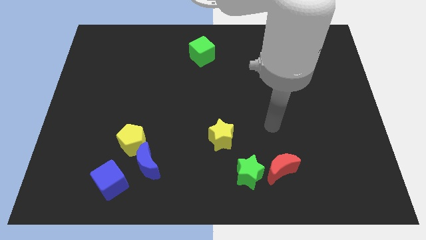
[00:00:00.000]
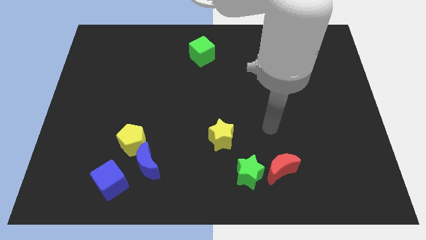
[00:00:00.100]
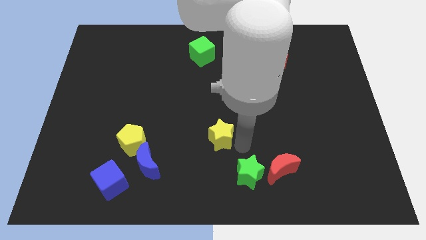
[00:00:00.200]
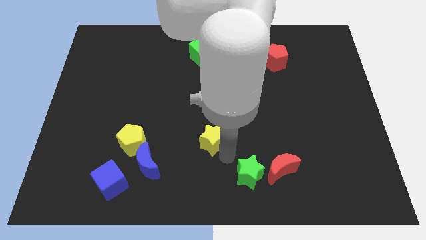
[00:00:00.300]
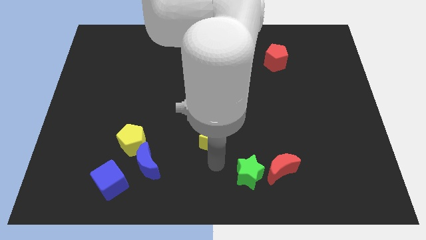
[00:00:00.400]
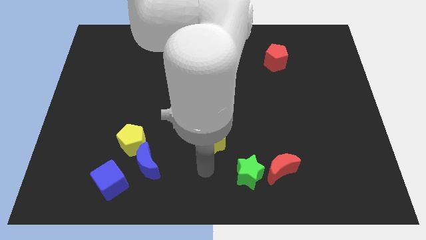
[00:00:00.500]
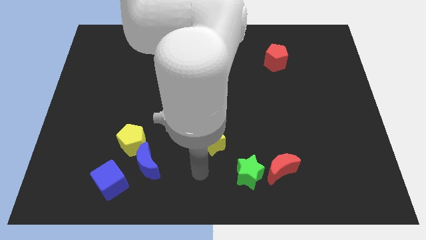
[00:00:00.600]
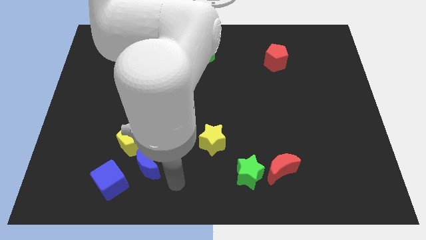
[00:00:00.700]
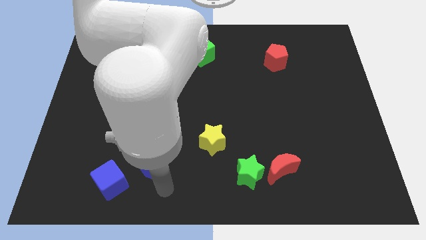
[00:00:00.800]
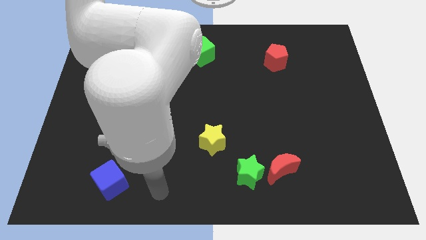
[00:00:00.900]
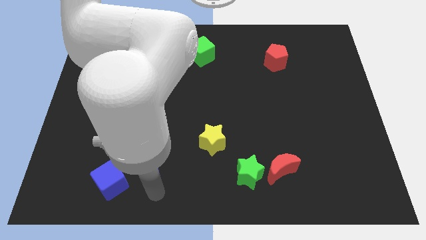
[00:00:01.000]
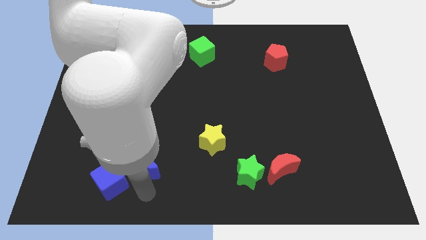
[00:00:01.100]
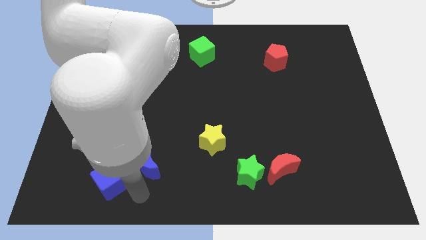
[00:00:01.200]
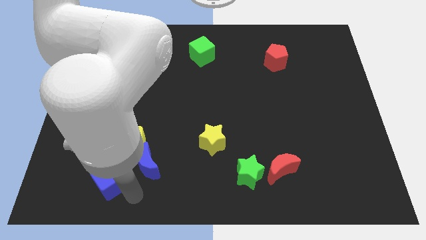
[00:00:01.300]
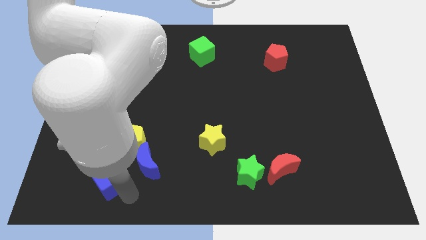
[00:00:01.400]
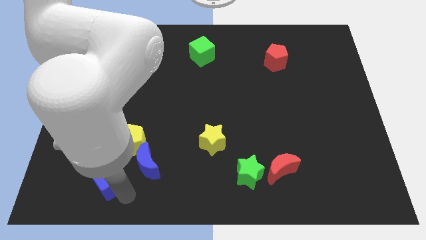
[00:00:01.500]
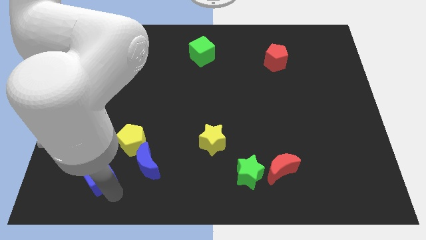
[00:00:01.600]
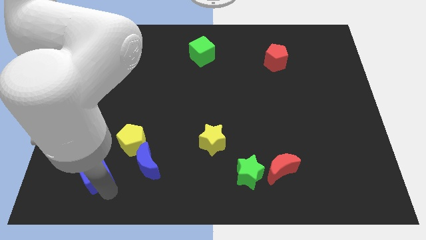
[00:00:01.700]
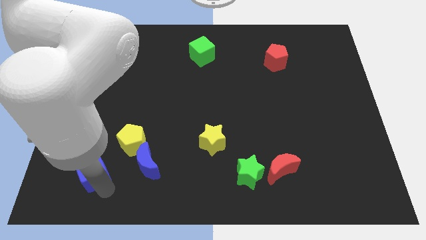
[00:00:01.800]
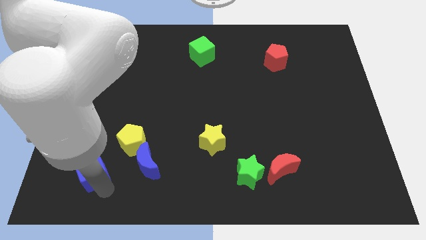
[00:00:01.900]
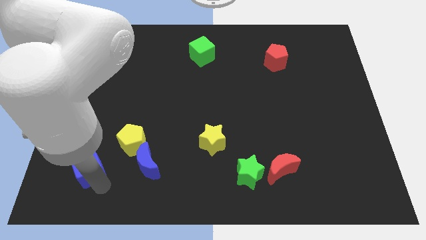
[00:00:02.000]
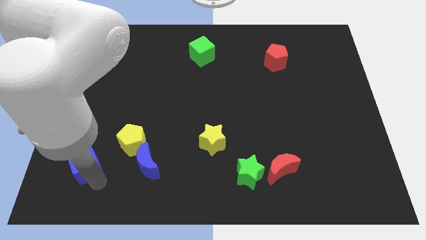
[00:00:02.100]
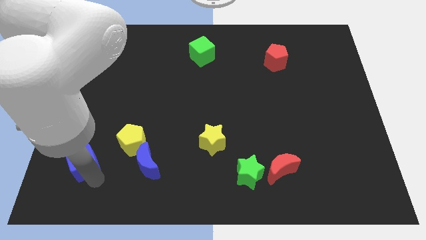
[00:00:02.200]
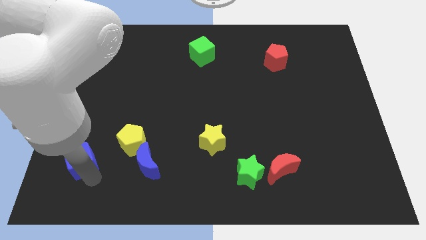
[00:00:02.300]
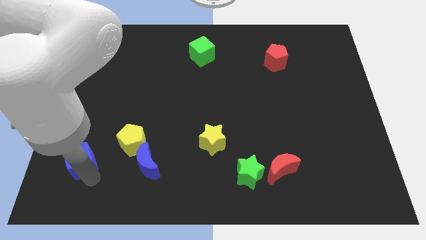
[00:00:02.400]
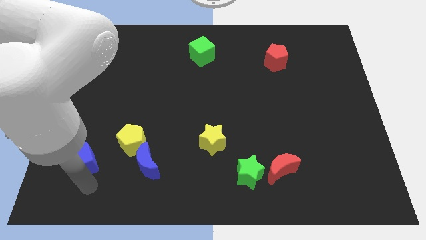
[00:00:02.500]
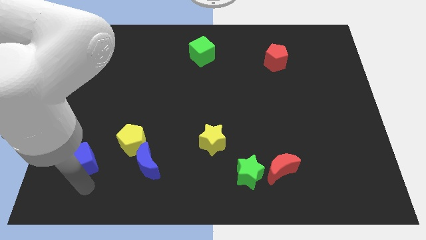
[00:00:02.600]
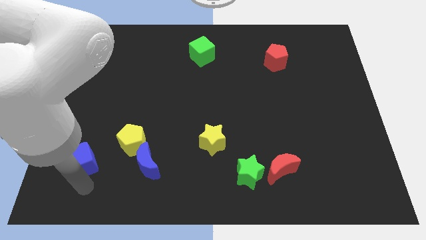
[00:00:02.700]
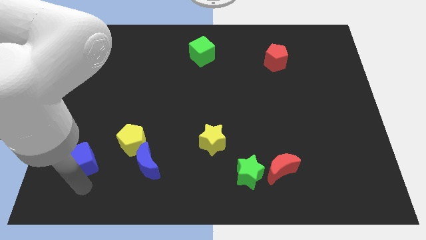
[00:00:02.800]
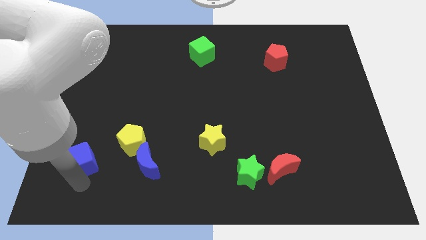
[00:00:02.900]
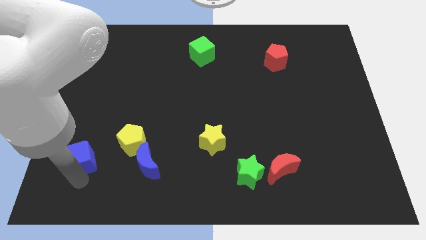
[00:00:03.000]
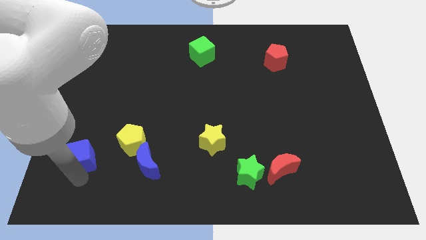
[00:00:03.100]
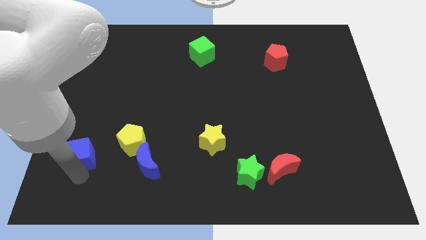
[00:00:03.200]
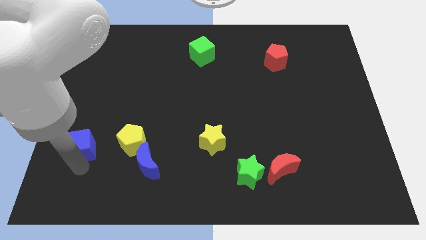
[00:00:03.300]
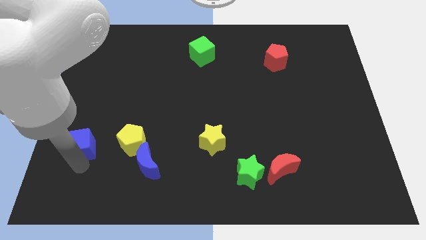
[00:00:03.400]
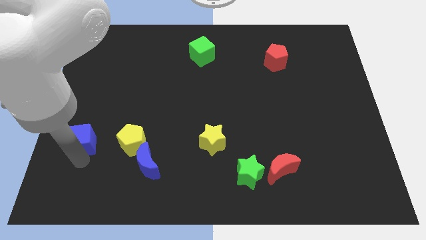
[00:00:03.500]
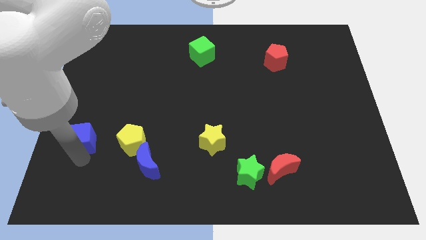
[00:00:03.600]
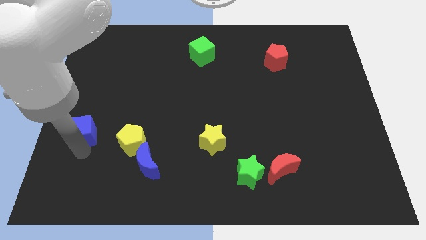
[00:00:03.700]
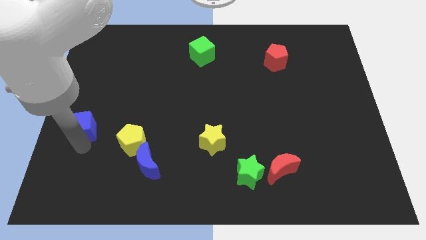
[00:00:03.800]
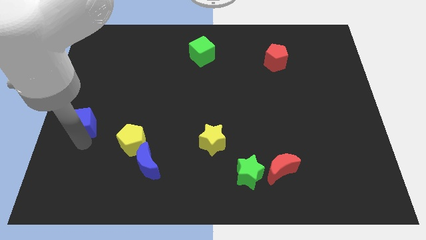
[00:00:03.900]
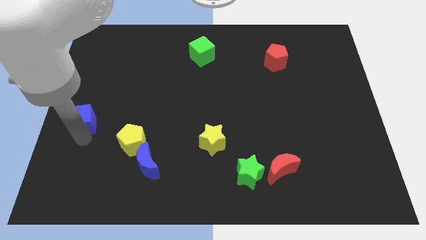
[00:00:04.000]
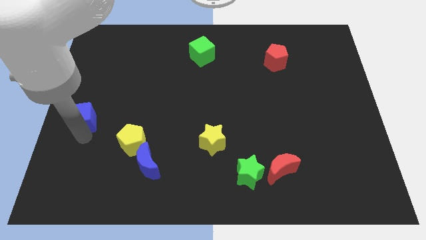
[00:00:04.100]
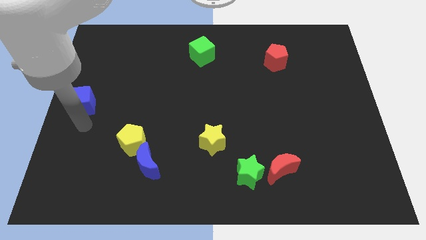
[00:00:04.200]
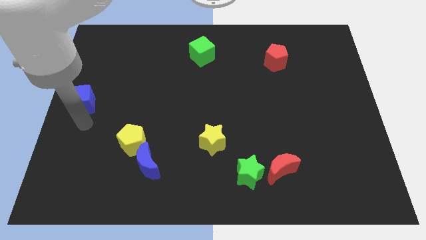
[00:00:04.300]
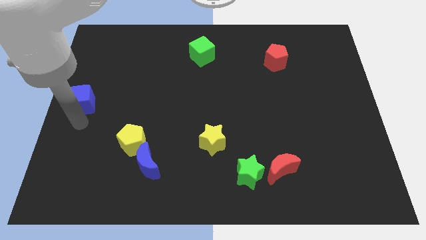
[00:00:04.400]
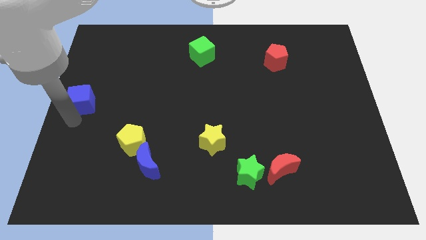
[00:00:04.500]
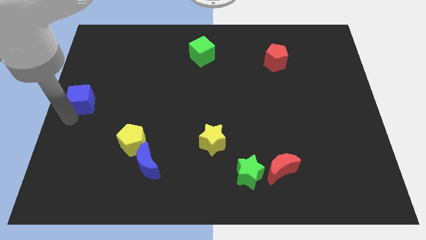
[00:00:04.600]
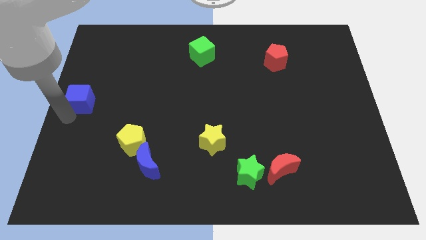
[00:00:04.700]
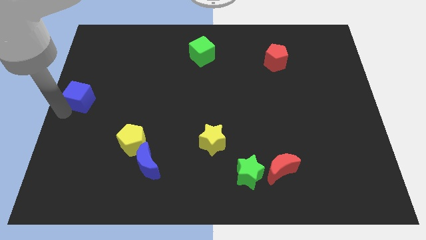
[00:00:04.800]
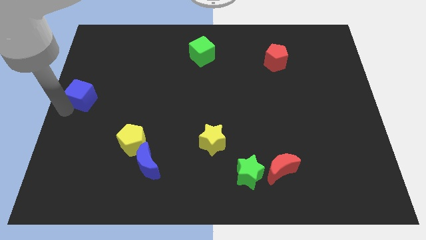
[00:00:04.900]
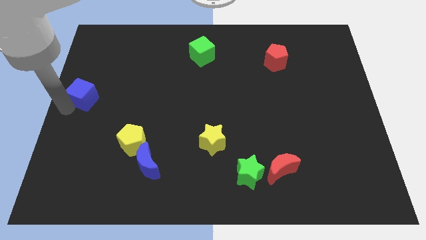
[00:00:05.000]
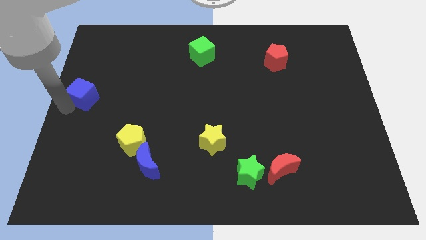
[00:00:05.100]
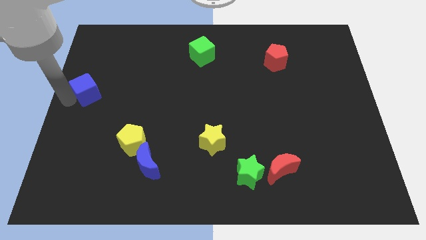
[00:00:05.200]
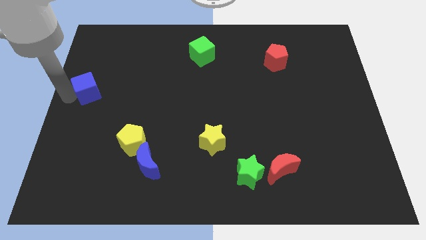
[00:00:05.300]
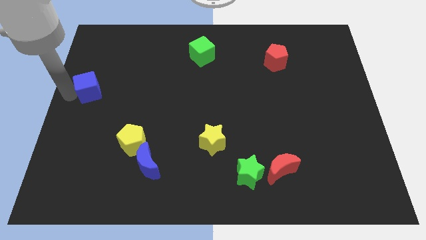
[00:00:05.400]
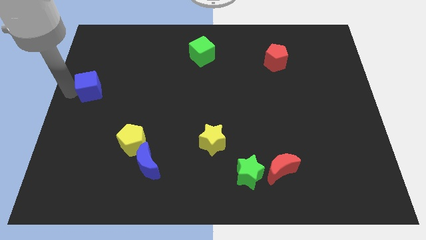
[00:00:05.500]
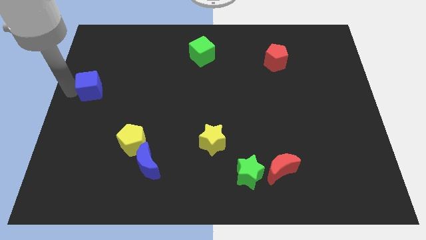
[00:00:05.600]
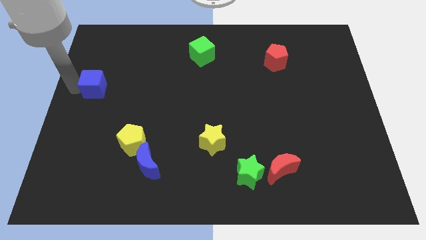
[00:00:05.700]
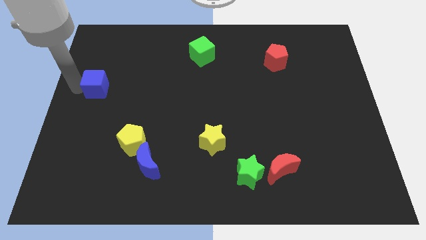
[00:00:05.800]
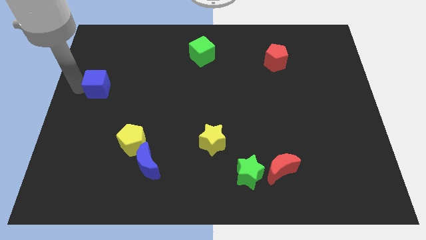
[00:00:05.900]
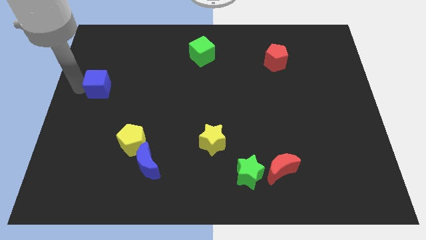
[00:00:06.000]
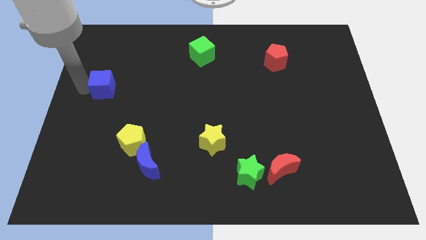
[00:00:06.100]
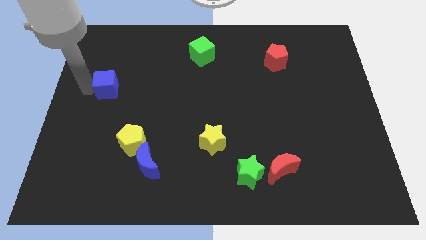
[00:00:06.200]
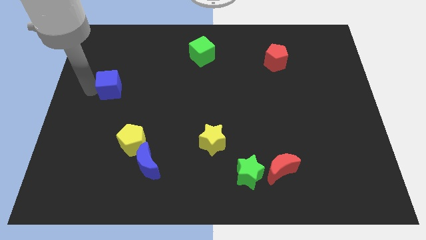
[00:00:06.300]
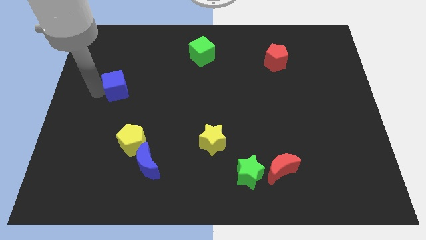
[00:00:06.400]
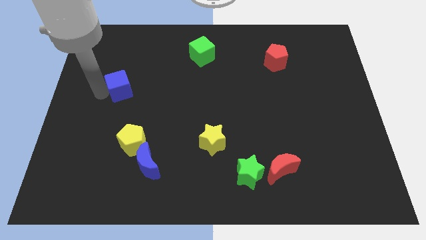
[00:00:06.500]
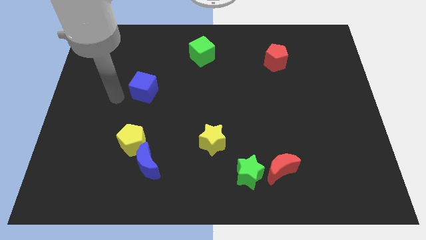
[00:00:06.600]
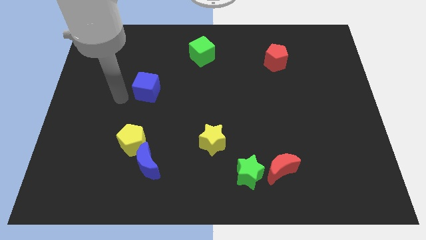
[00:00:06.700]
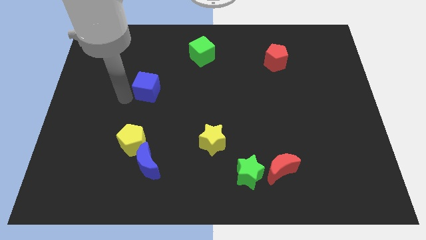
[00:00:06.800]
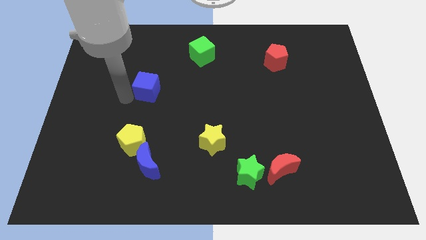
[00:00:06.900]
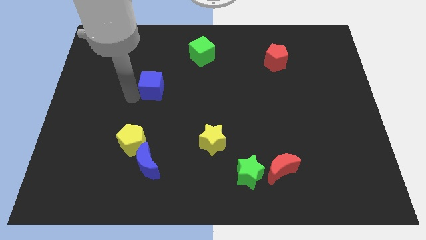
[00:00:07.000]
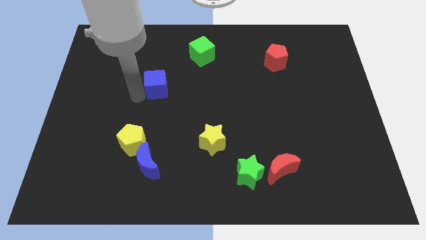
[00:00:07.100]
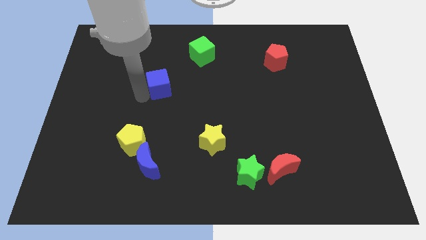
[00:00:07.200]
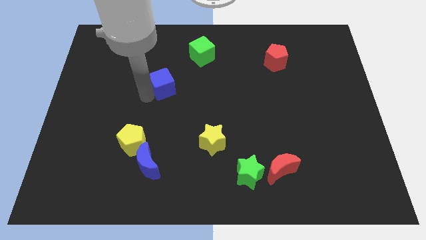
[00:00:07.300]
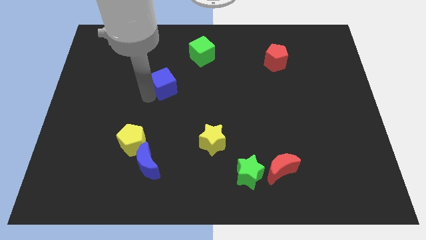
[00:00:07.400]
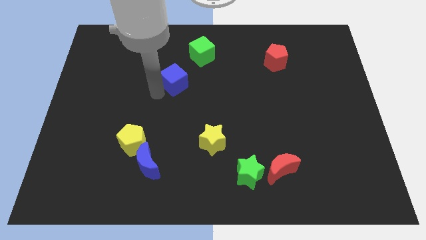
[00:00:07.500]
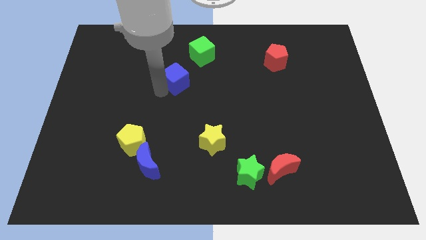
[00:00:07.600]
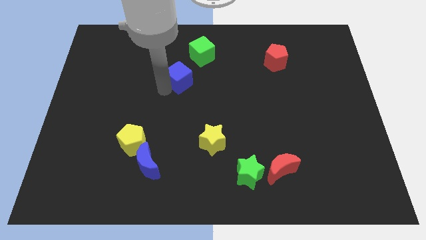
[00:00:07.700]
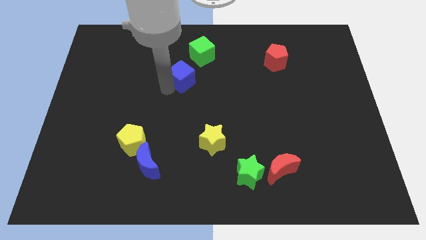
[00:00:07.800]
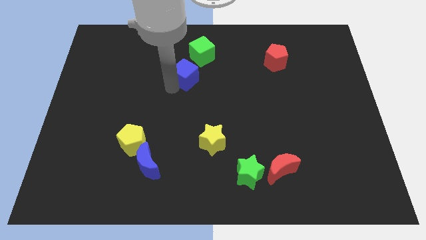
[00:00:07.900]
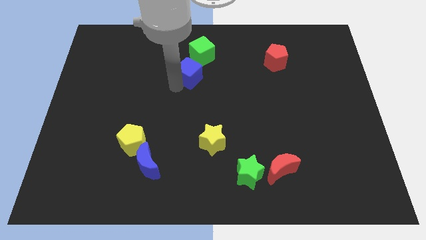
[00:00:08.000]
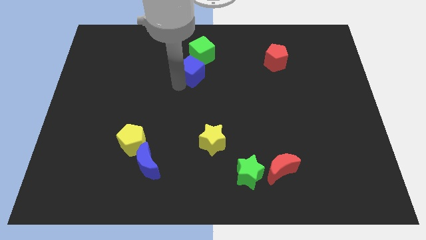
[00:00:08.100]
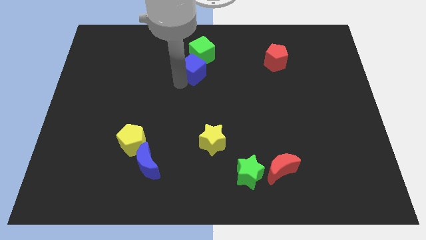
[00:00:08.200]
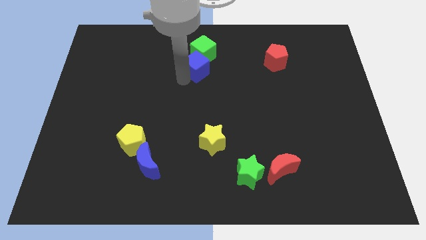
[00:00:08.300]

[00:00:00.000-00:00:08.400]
move the blue cube to the green cube

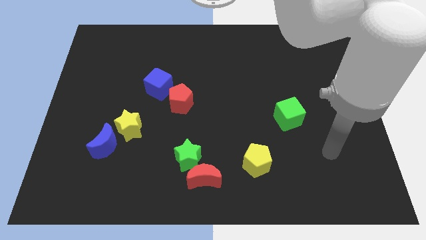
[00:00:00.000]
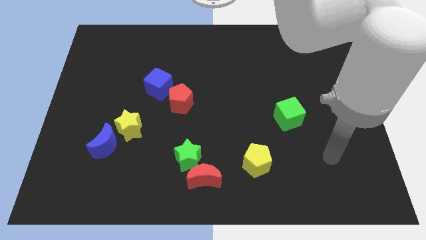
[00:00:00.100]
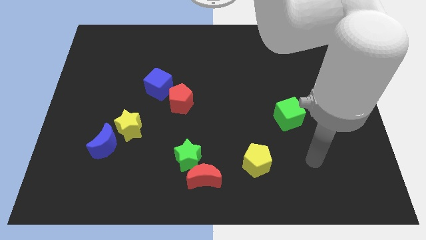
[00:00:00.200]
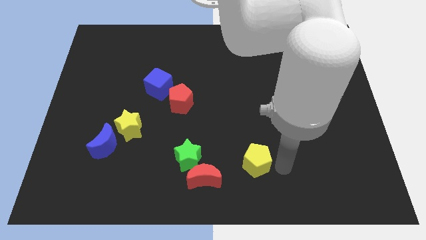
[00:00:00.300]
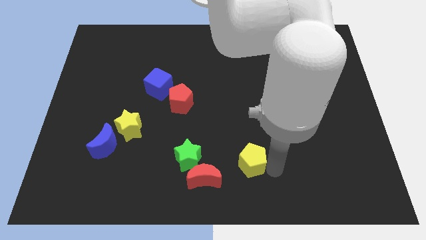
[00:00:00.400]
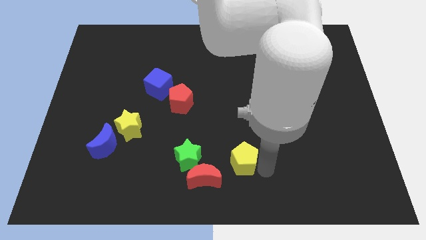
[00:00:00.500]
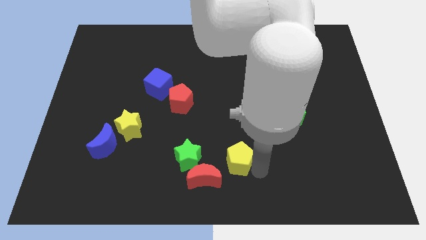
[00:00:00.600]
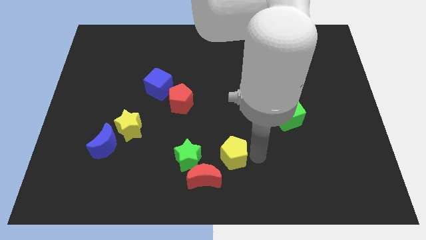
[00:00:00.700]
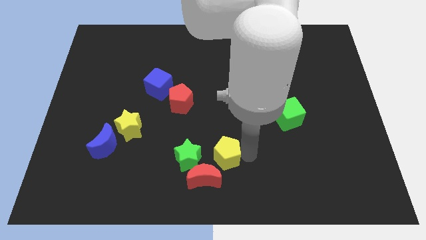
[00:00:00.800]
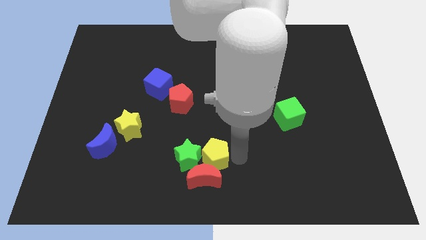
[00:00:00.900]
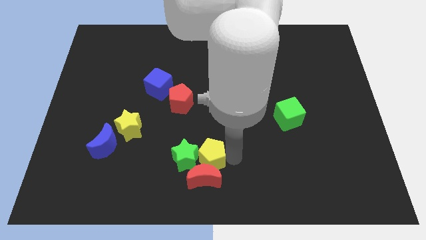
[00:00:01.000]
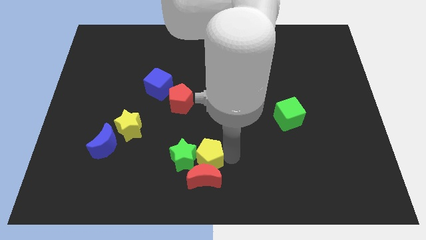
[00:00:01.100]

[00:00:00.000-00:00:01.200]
move the yellow pentagon towards the red moon
